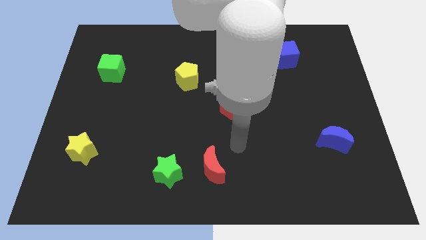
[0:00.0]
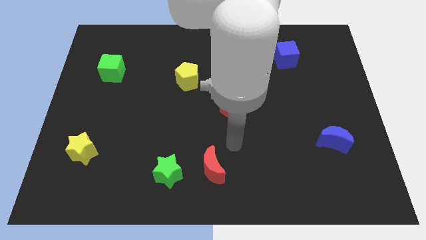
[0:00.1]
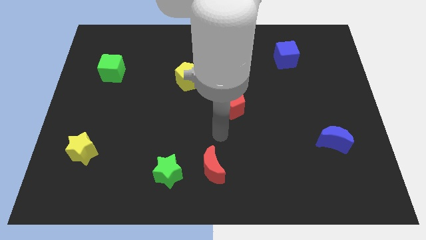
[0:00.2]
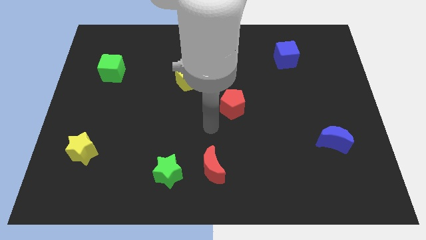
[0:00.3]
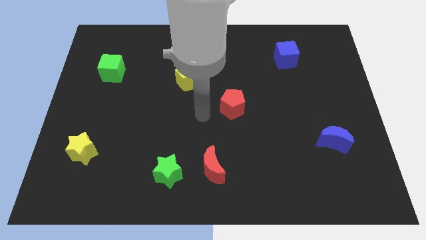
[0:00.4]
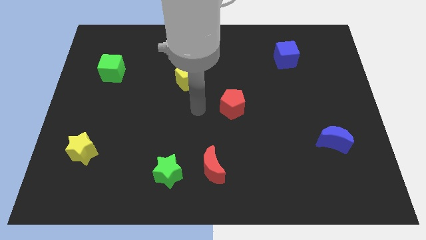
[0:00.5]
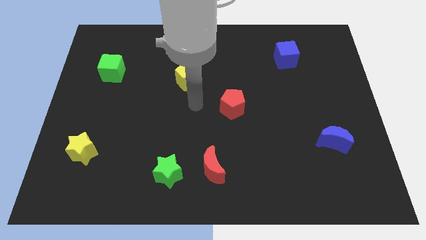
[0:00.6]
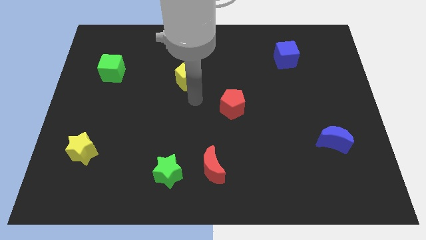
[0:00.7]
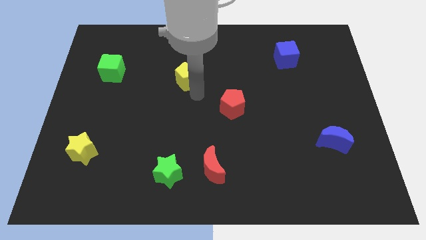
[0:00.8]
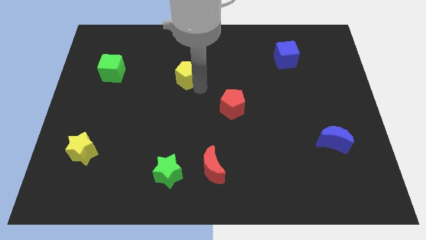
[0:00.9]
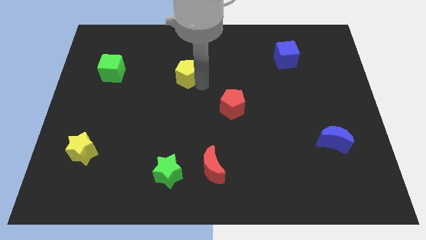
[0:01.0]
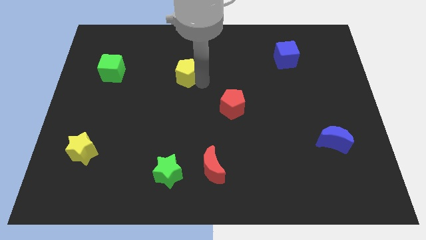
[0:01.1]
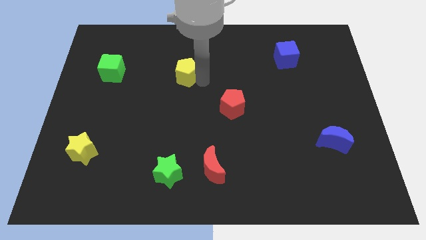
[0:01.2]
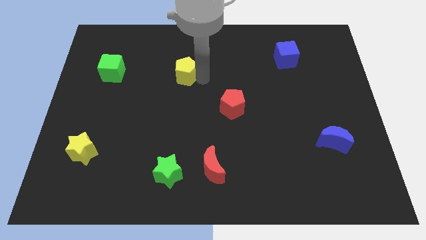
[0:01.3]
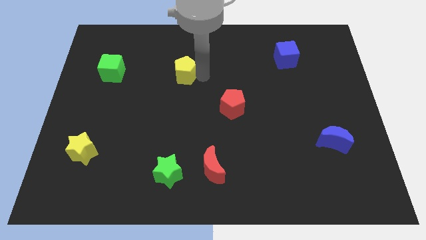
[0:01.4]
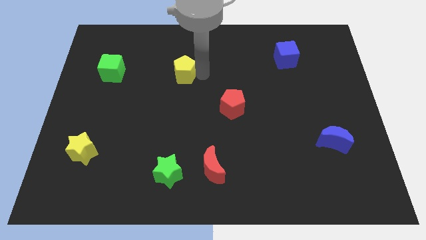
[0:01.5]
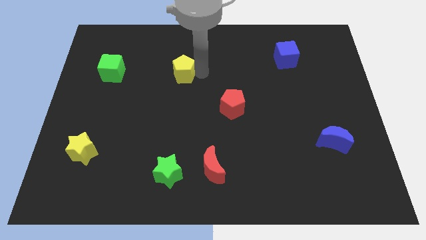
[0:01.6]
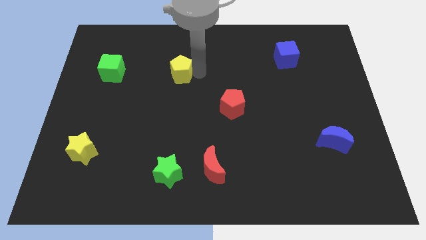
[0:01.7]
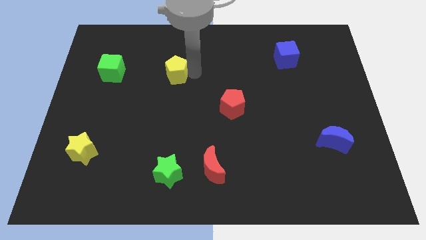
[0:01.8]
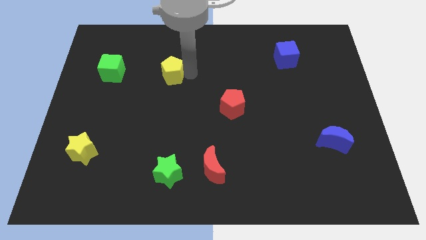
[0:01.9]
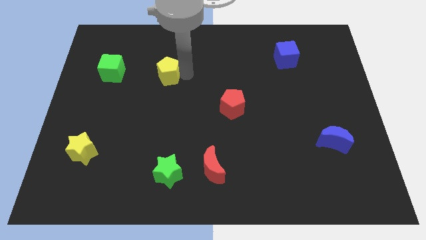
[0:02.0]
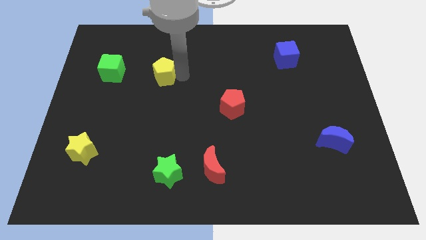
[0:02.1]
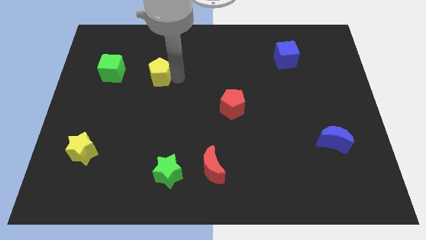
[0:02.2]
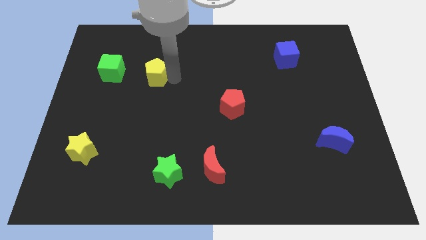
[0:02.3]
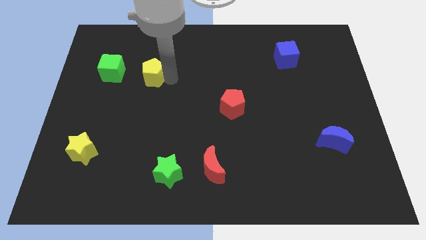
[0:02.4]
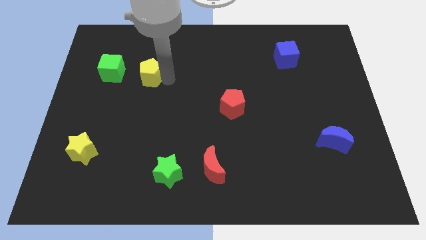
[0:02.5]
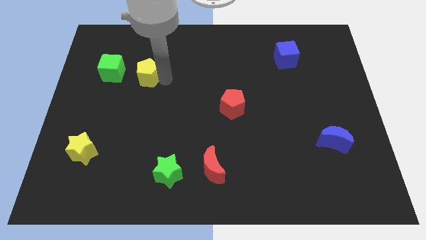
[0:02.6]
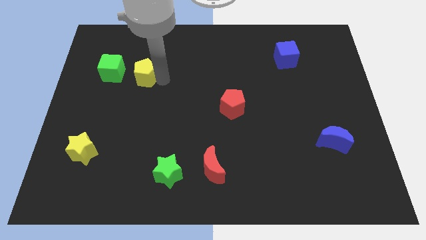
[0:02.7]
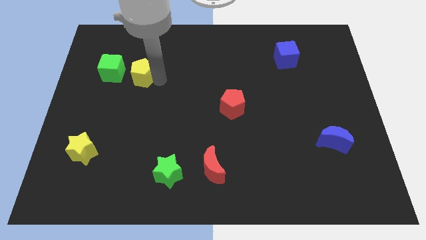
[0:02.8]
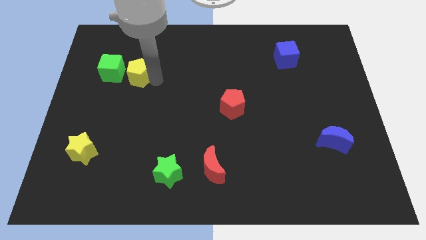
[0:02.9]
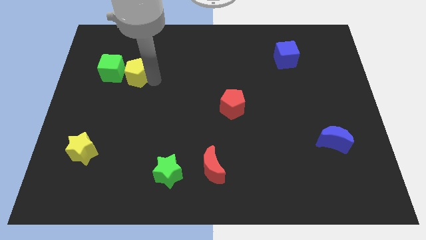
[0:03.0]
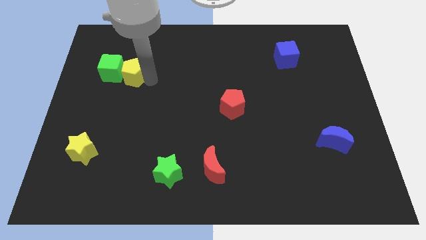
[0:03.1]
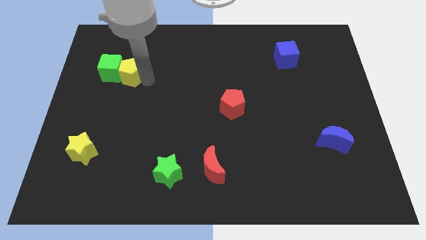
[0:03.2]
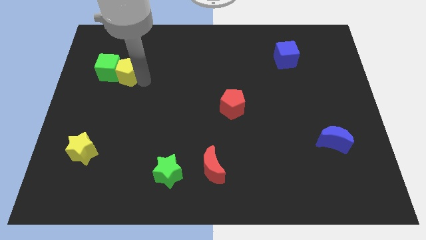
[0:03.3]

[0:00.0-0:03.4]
push the yellow pentagon close to the green cube

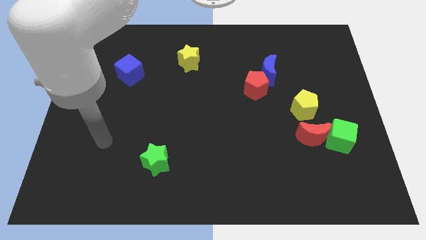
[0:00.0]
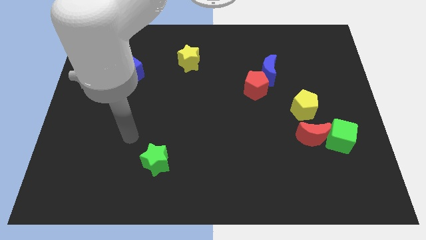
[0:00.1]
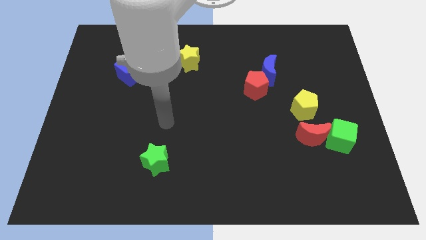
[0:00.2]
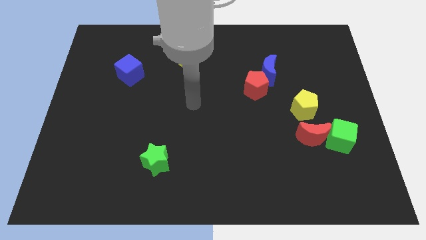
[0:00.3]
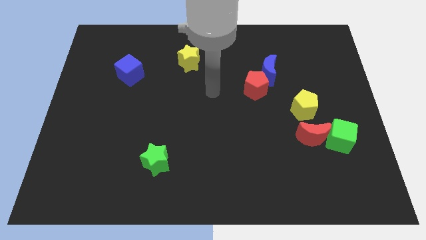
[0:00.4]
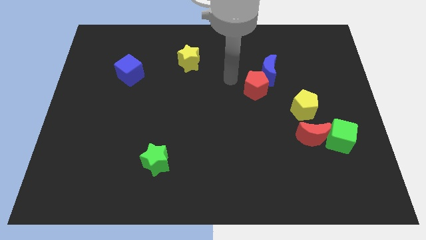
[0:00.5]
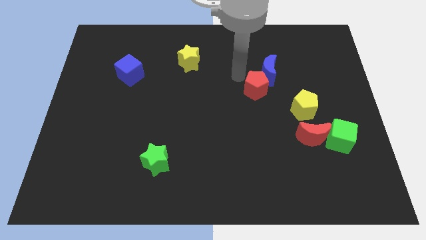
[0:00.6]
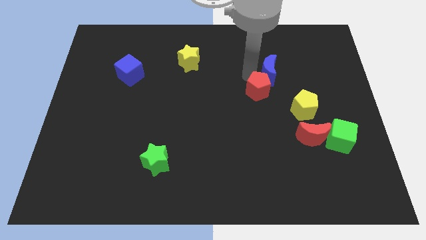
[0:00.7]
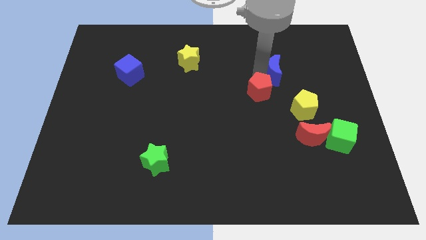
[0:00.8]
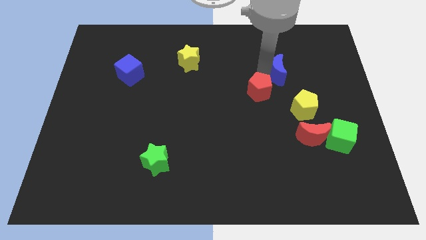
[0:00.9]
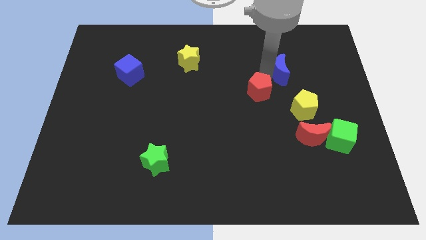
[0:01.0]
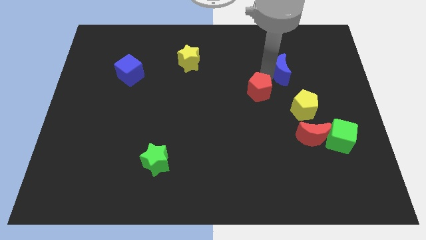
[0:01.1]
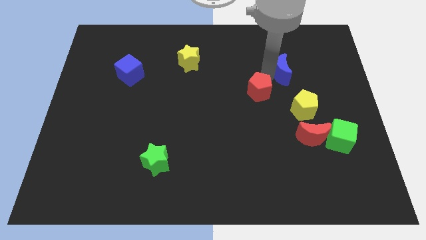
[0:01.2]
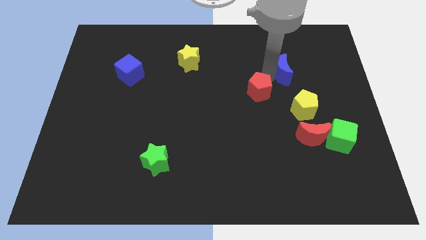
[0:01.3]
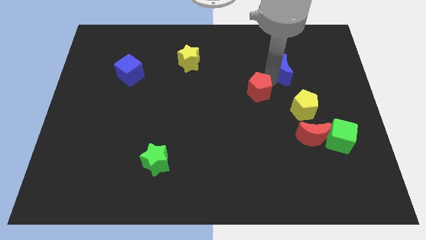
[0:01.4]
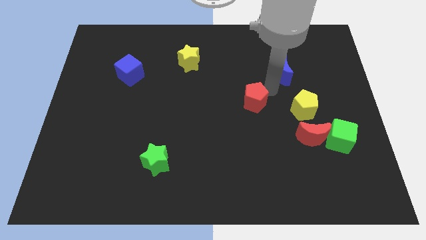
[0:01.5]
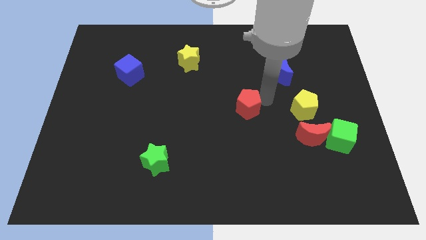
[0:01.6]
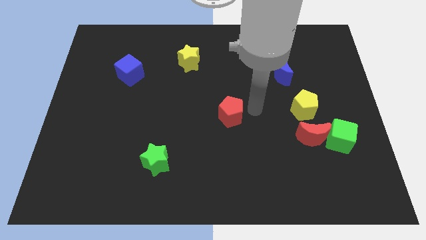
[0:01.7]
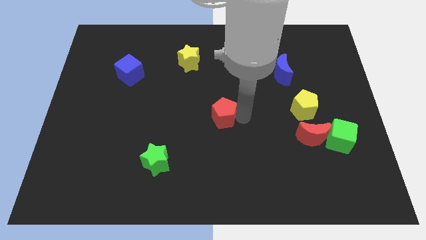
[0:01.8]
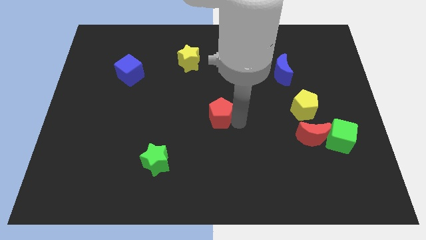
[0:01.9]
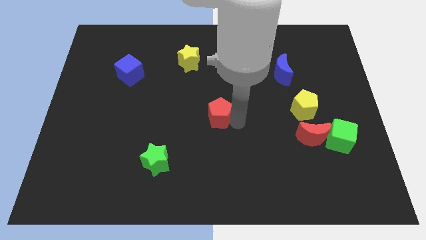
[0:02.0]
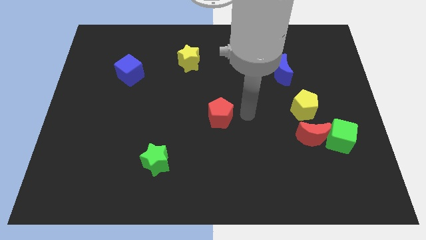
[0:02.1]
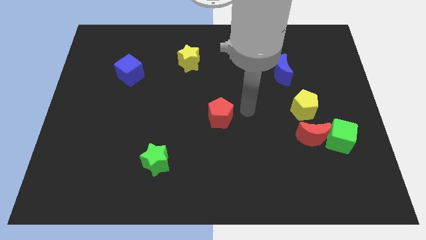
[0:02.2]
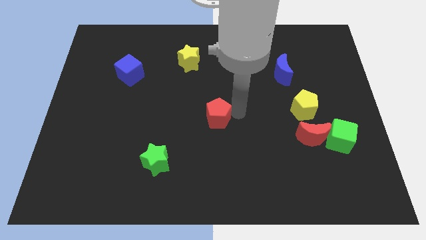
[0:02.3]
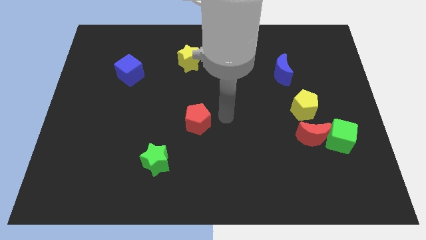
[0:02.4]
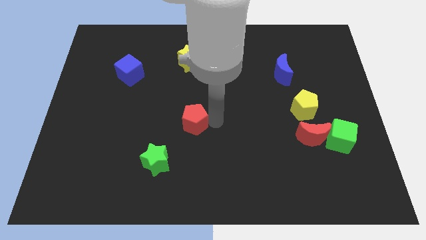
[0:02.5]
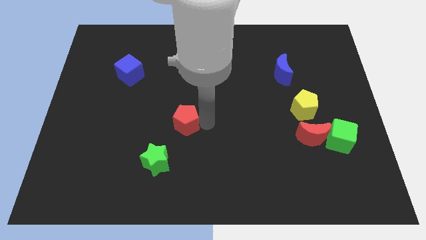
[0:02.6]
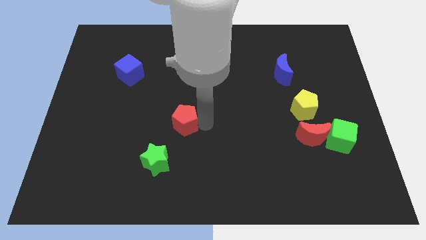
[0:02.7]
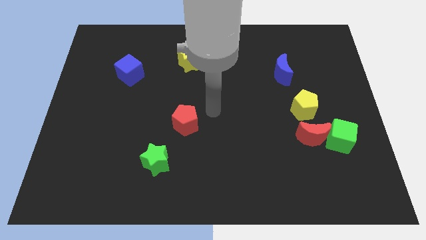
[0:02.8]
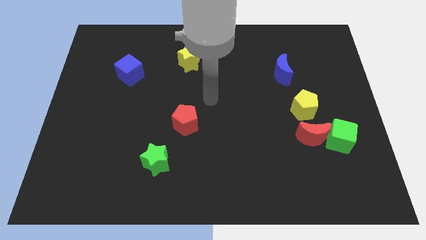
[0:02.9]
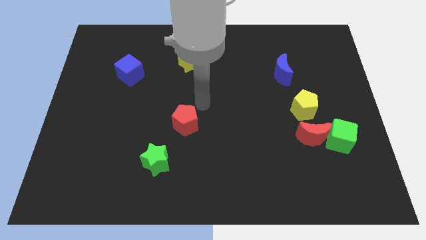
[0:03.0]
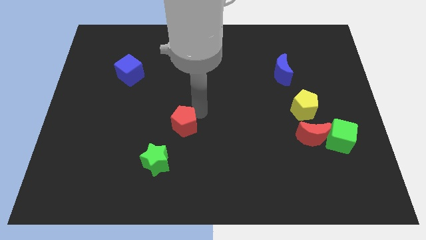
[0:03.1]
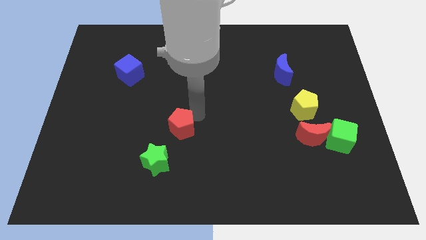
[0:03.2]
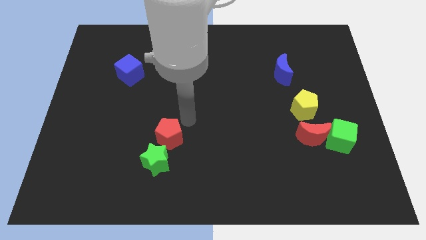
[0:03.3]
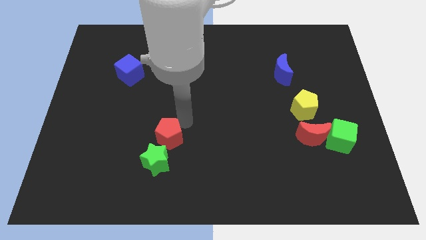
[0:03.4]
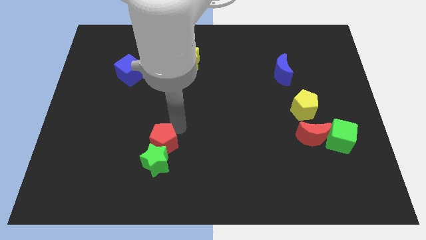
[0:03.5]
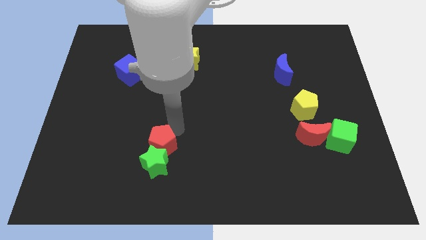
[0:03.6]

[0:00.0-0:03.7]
push the red pentagon next to the green star

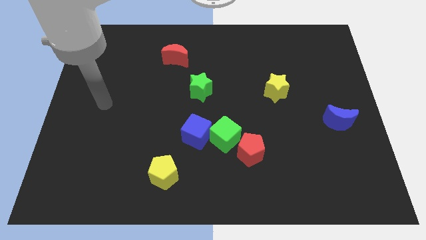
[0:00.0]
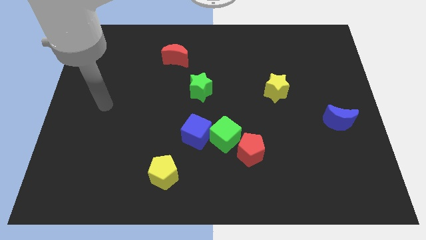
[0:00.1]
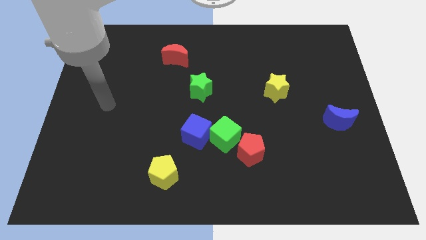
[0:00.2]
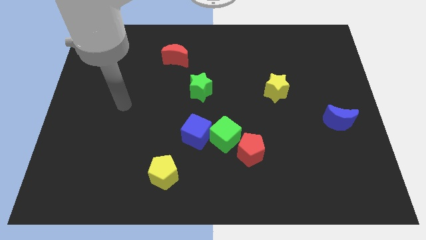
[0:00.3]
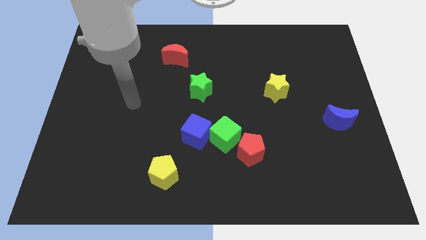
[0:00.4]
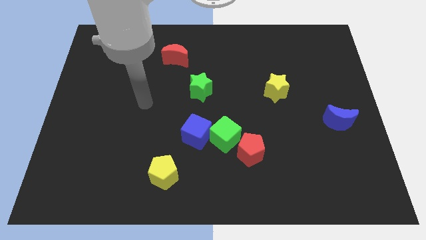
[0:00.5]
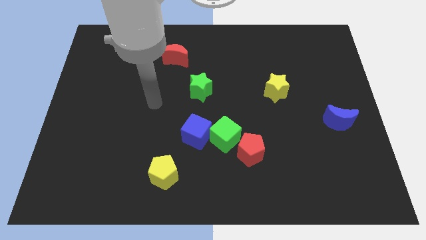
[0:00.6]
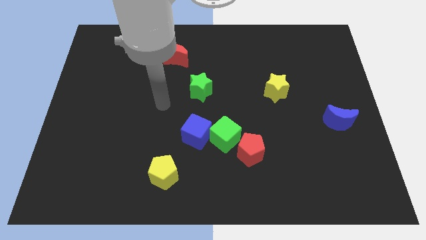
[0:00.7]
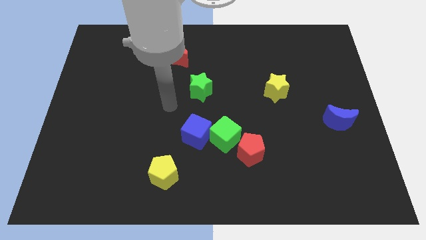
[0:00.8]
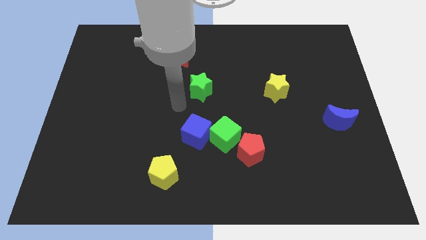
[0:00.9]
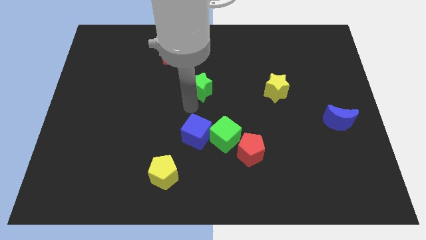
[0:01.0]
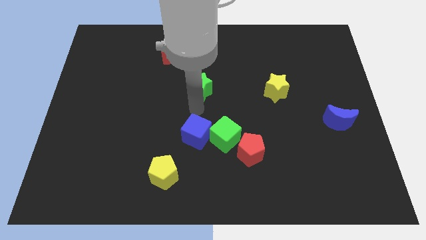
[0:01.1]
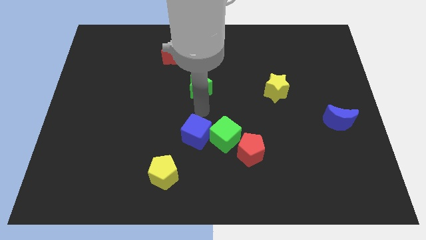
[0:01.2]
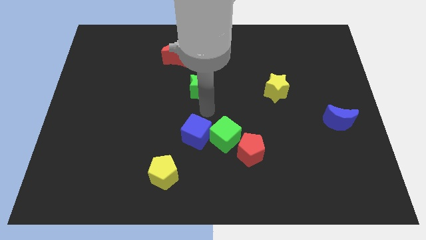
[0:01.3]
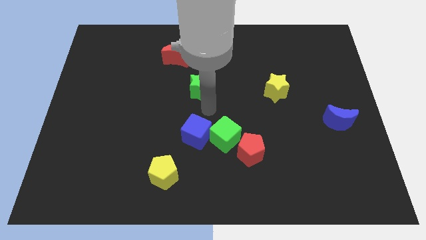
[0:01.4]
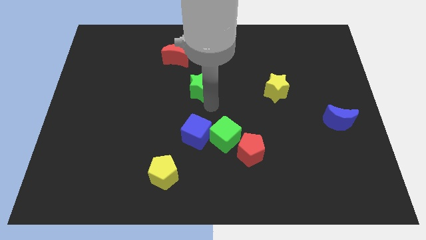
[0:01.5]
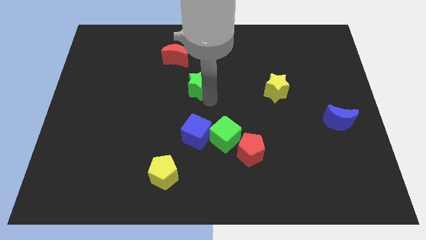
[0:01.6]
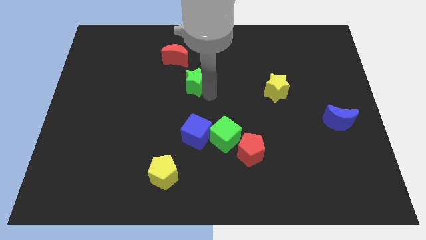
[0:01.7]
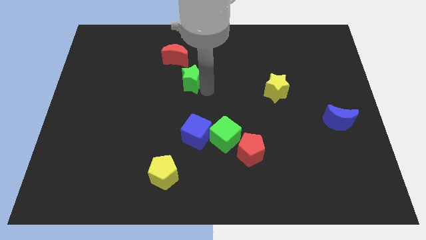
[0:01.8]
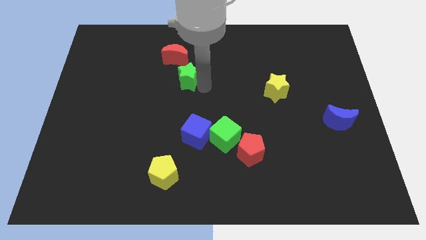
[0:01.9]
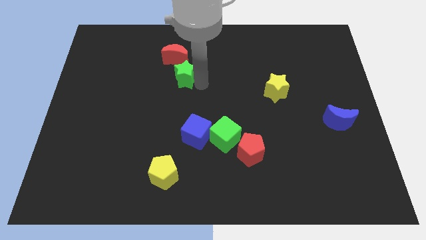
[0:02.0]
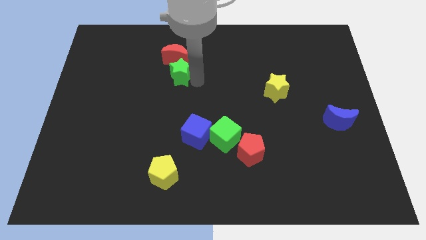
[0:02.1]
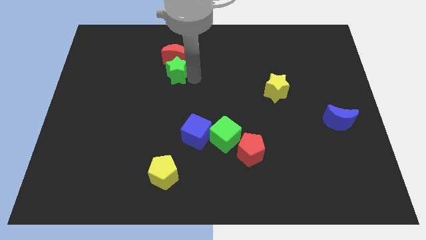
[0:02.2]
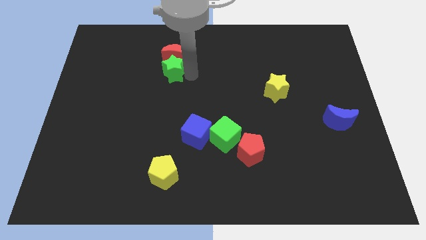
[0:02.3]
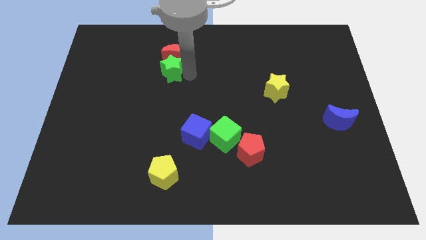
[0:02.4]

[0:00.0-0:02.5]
push the green star towards the red moon
